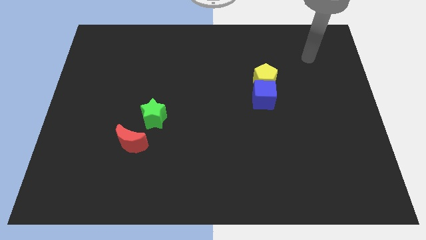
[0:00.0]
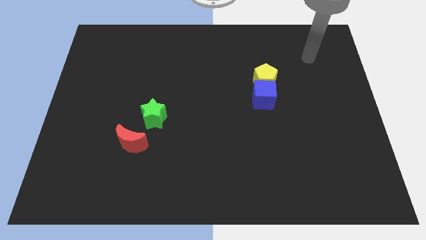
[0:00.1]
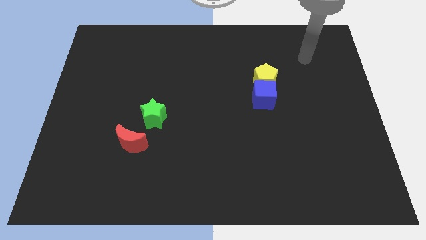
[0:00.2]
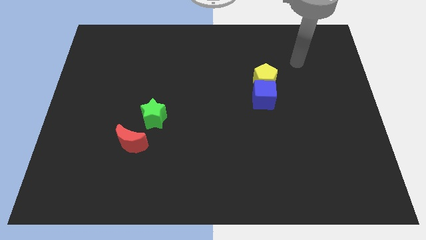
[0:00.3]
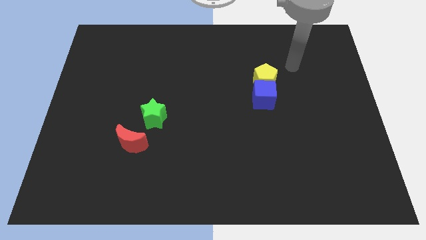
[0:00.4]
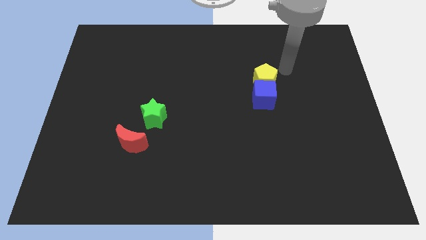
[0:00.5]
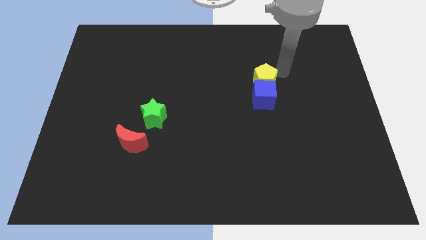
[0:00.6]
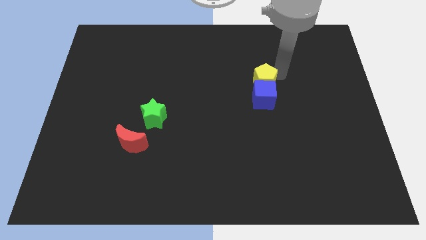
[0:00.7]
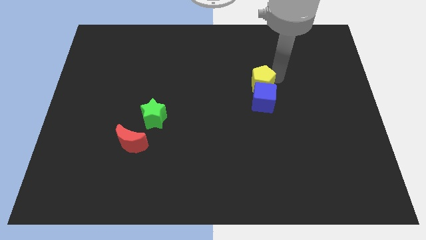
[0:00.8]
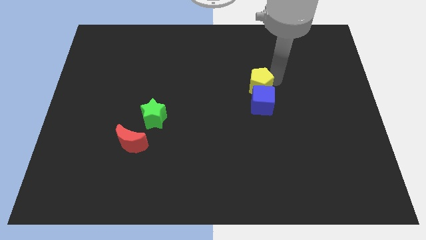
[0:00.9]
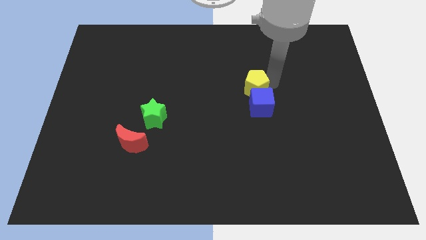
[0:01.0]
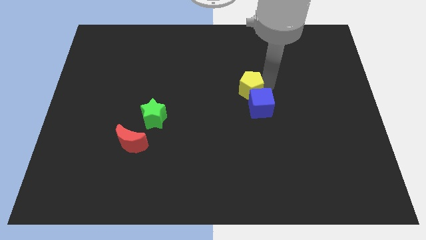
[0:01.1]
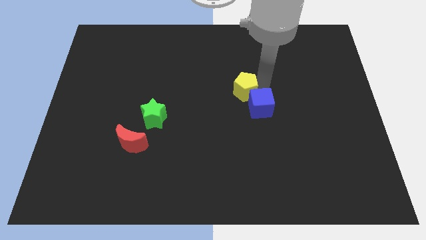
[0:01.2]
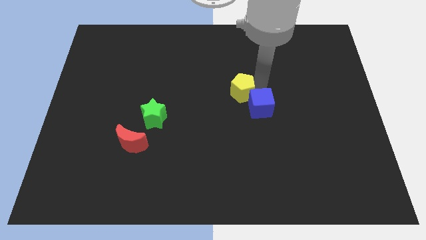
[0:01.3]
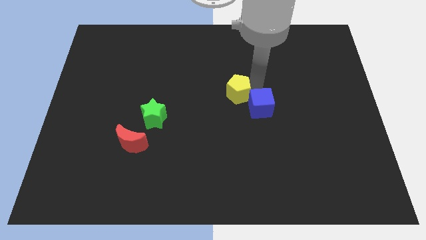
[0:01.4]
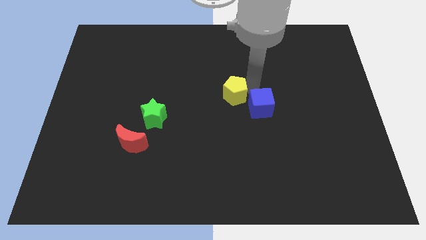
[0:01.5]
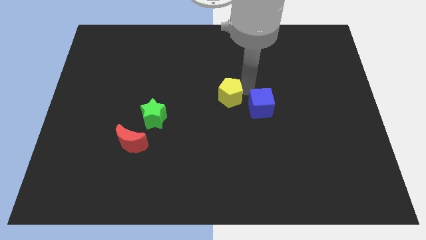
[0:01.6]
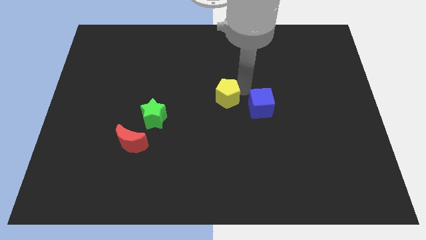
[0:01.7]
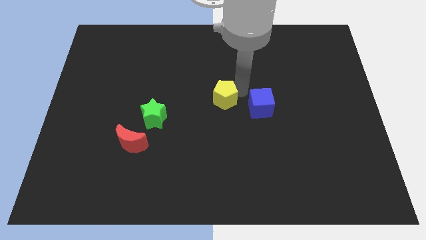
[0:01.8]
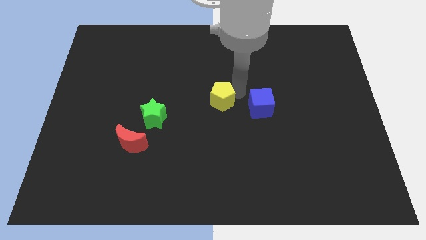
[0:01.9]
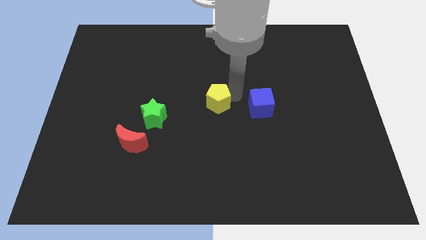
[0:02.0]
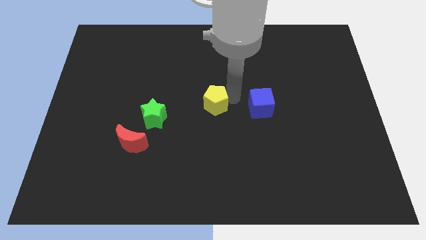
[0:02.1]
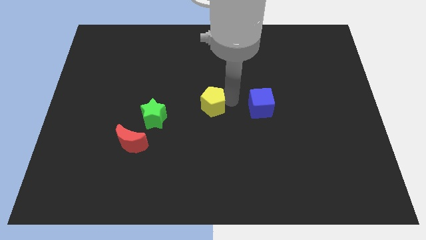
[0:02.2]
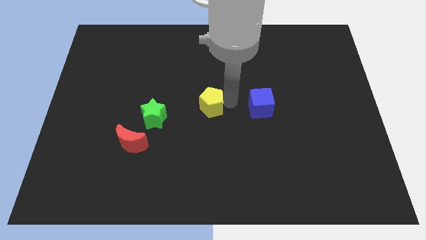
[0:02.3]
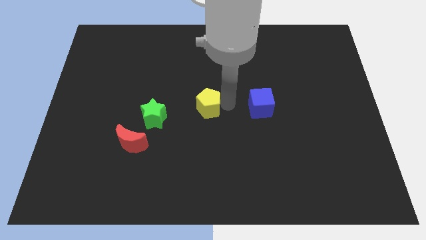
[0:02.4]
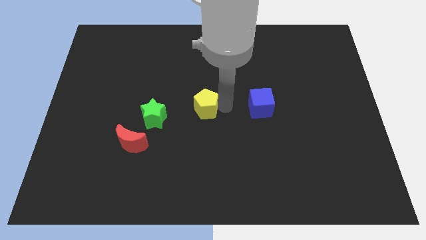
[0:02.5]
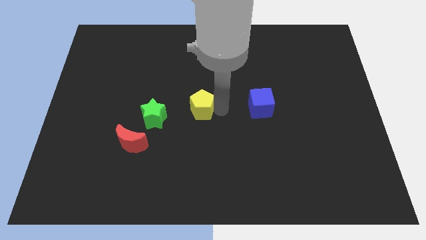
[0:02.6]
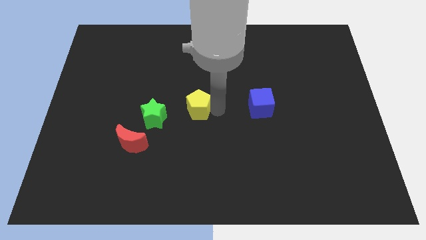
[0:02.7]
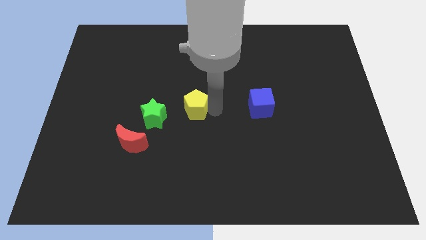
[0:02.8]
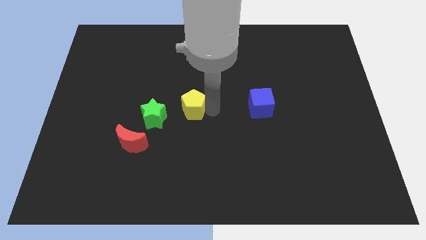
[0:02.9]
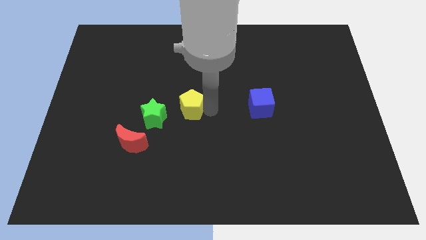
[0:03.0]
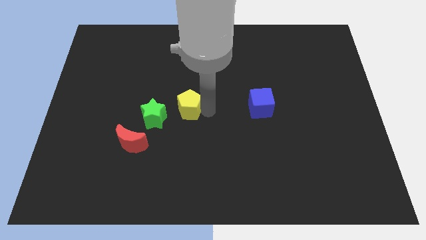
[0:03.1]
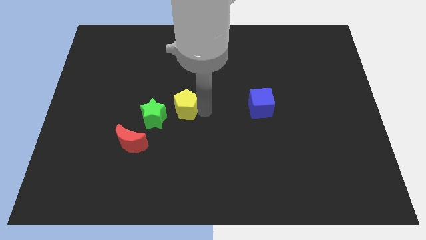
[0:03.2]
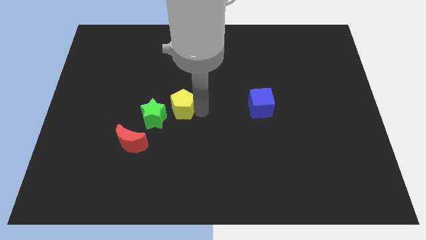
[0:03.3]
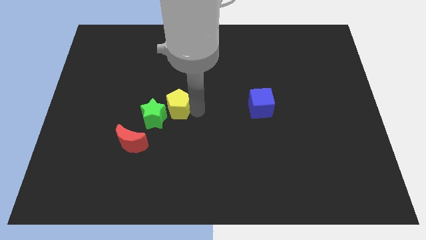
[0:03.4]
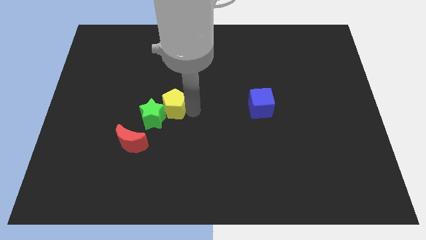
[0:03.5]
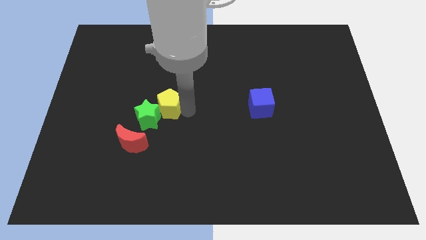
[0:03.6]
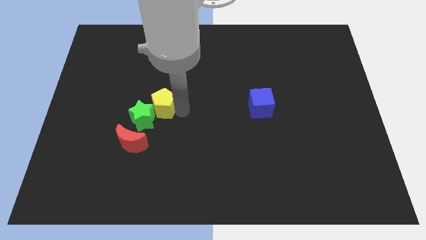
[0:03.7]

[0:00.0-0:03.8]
slide the yellow block next to the green block

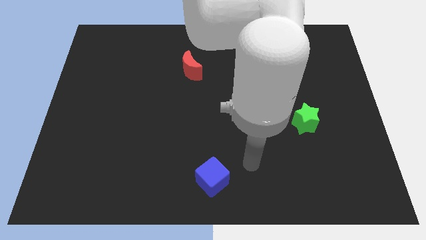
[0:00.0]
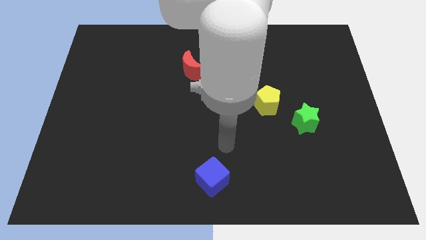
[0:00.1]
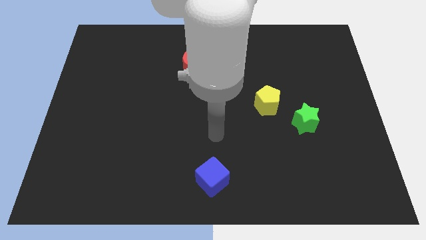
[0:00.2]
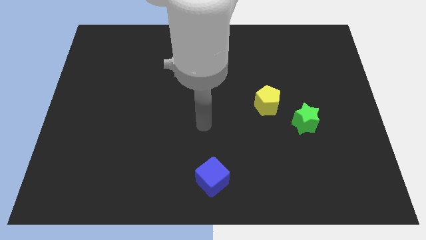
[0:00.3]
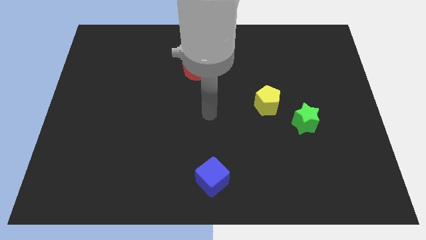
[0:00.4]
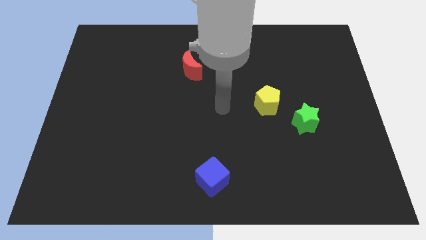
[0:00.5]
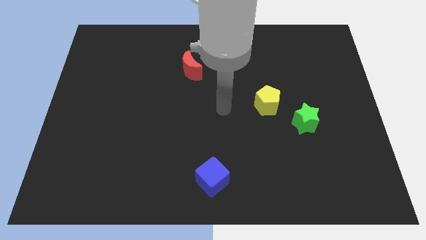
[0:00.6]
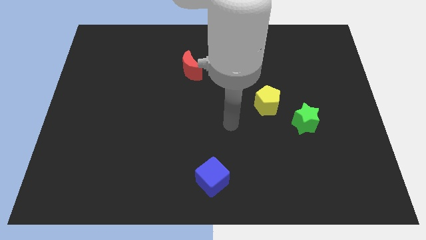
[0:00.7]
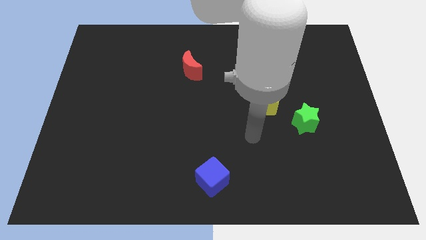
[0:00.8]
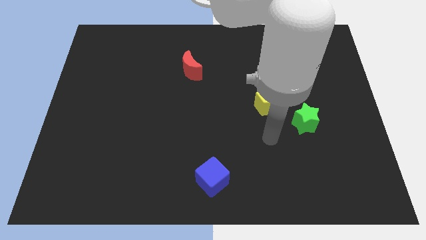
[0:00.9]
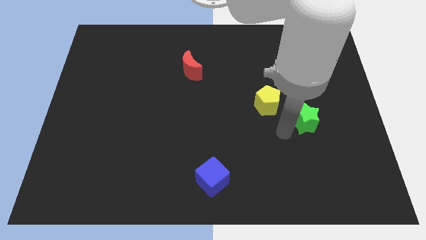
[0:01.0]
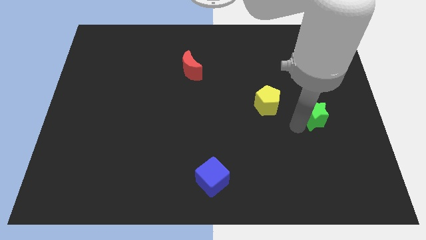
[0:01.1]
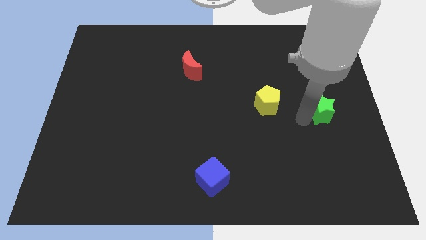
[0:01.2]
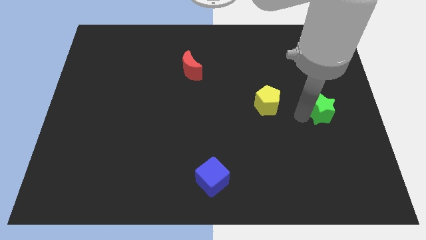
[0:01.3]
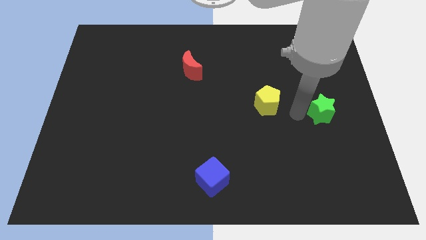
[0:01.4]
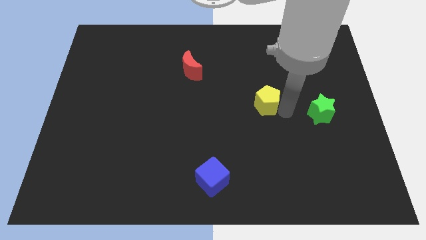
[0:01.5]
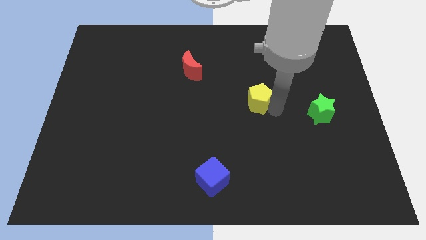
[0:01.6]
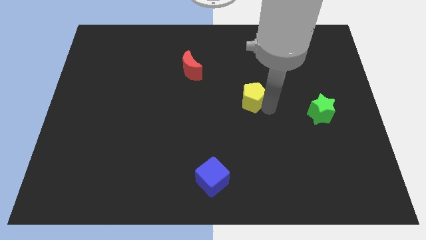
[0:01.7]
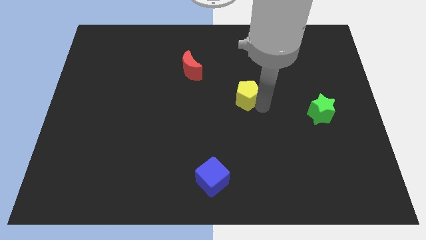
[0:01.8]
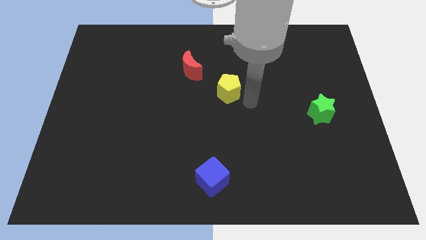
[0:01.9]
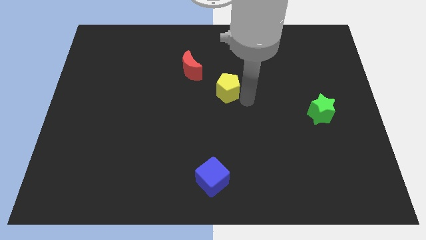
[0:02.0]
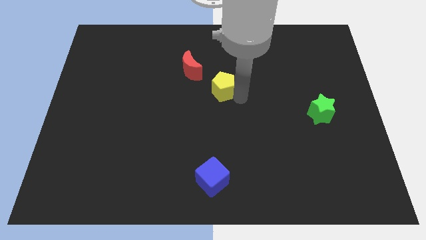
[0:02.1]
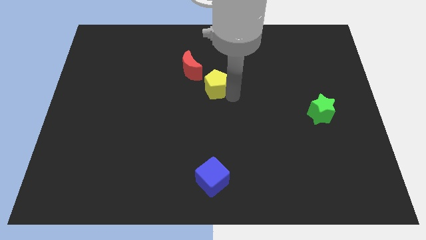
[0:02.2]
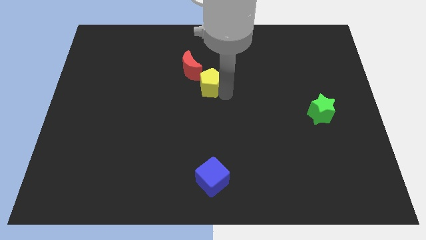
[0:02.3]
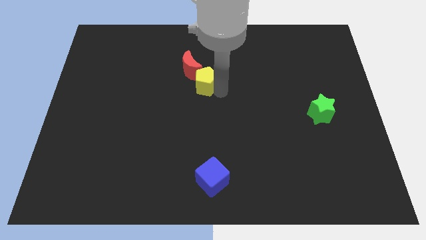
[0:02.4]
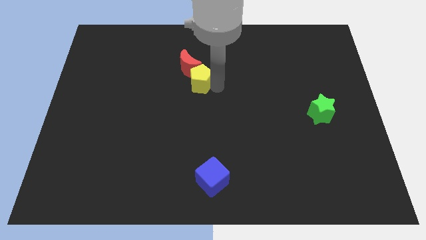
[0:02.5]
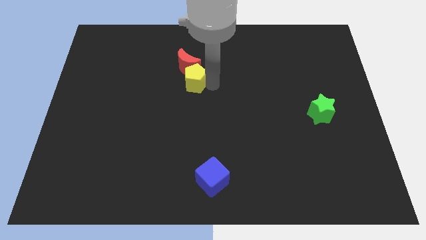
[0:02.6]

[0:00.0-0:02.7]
slide the pentagon to the red moon

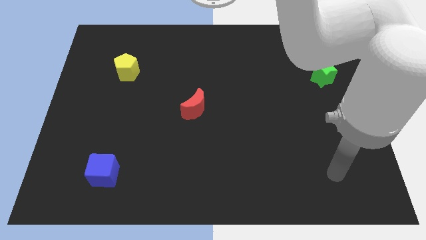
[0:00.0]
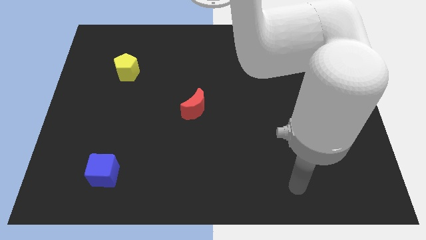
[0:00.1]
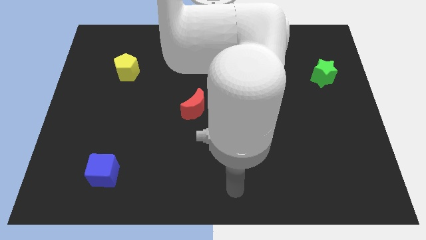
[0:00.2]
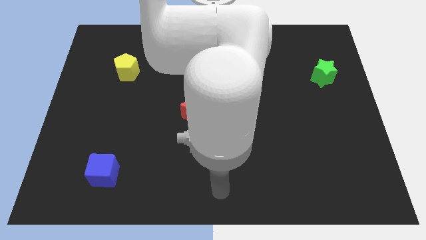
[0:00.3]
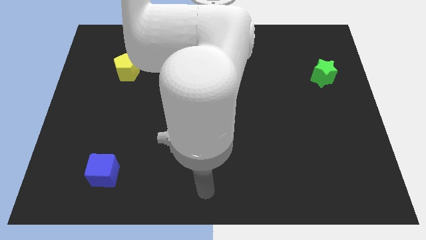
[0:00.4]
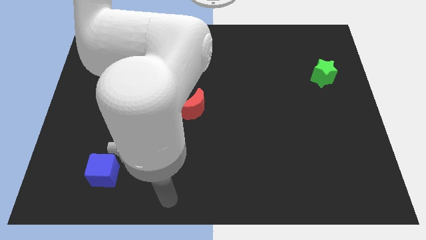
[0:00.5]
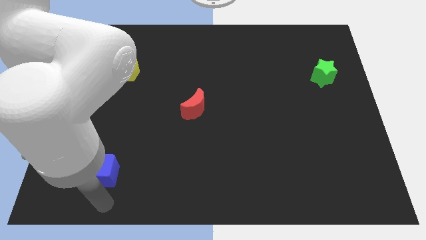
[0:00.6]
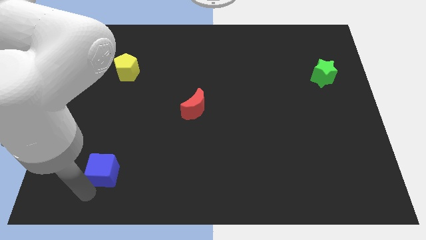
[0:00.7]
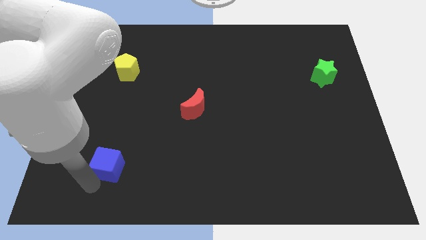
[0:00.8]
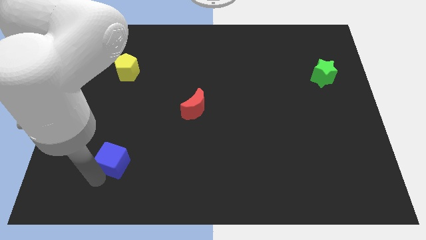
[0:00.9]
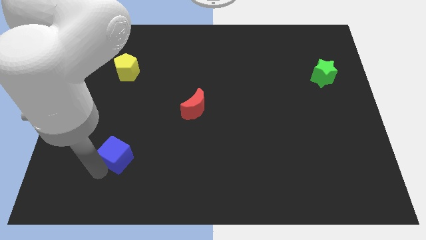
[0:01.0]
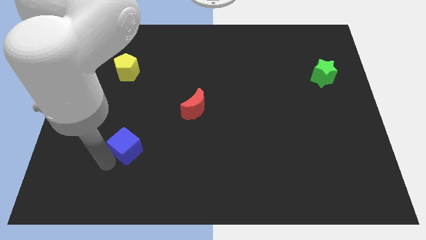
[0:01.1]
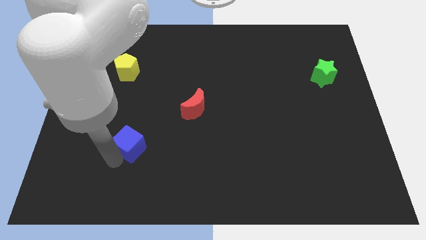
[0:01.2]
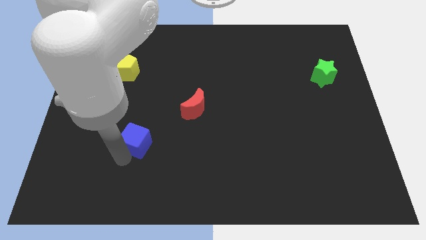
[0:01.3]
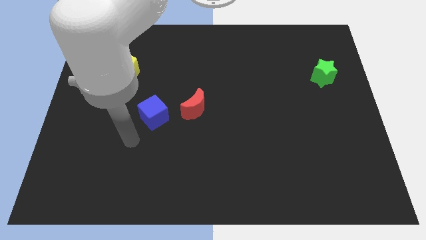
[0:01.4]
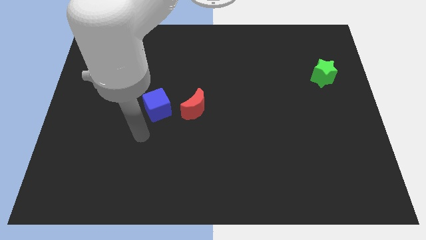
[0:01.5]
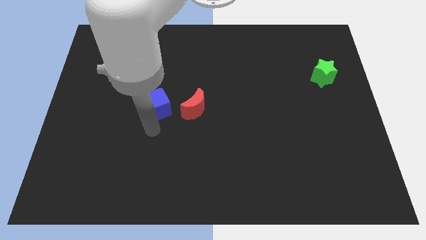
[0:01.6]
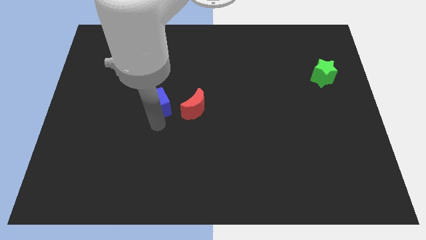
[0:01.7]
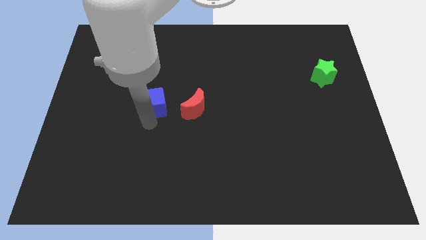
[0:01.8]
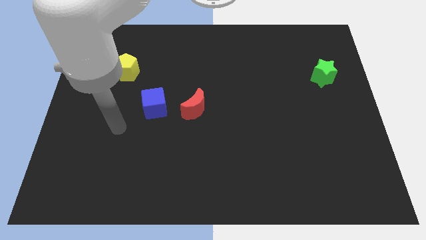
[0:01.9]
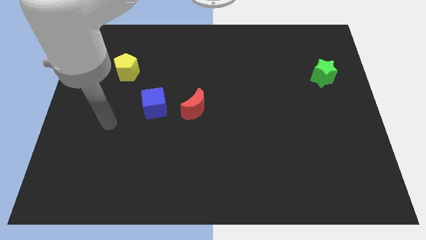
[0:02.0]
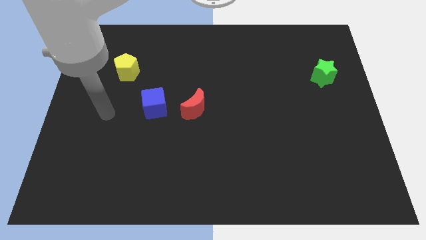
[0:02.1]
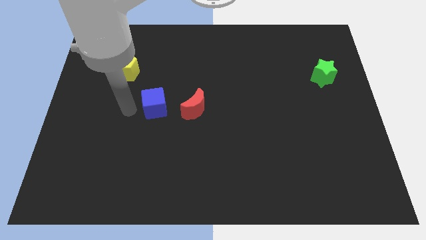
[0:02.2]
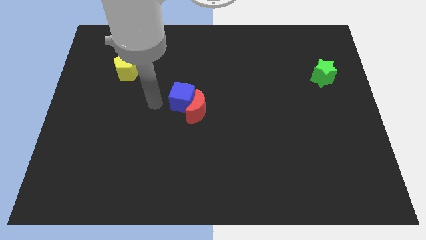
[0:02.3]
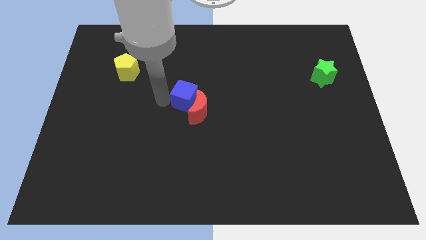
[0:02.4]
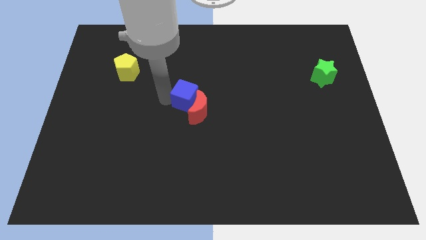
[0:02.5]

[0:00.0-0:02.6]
slide the cube to the red moon
